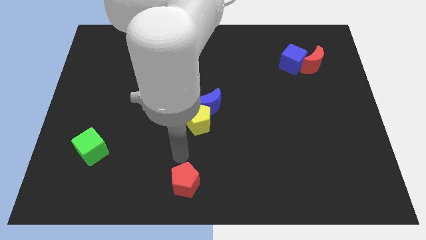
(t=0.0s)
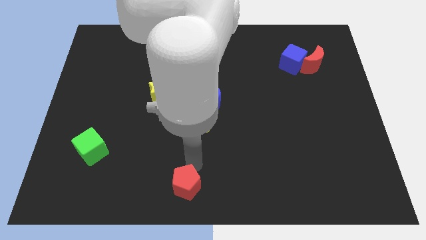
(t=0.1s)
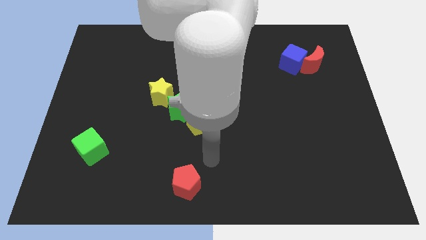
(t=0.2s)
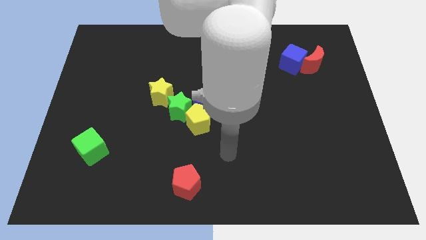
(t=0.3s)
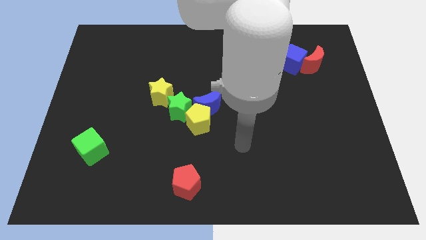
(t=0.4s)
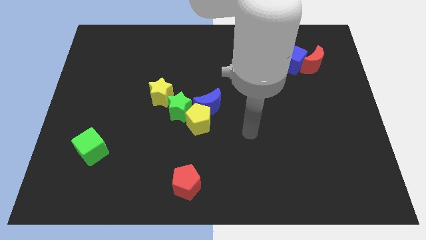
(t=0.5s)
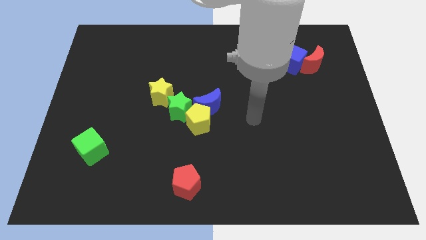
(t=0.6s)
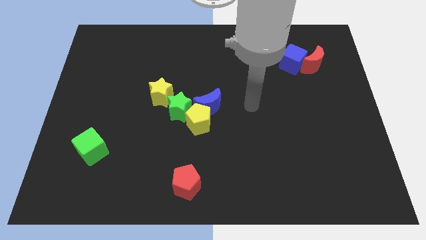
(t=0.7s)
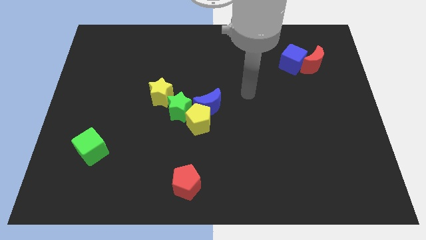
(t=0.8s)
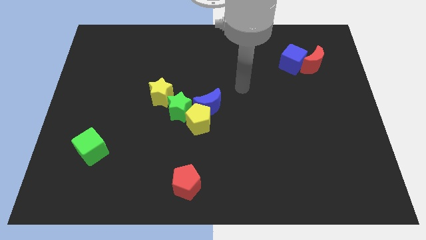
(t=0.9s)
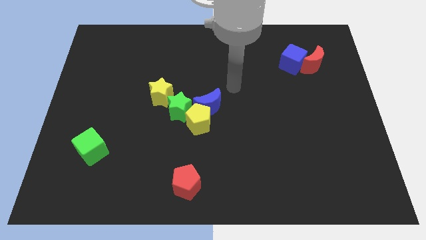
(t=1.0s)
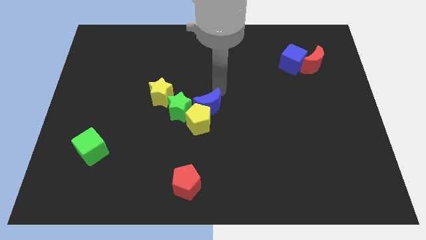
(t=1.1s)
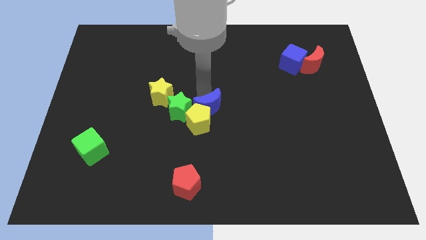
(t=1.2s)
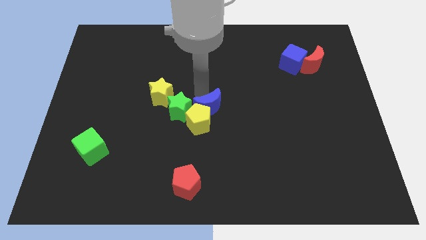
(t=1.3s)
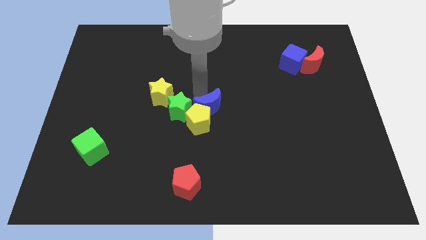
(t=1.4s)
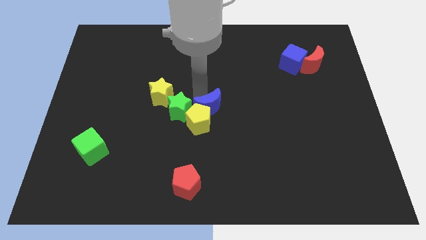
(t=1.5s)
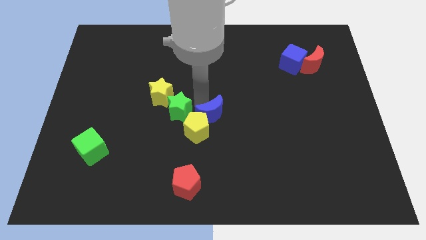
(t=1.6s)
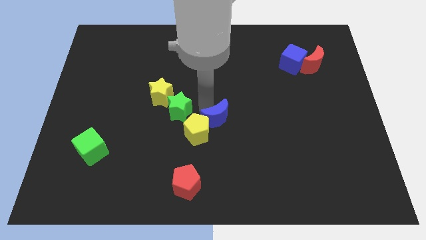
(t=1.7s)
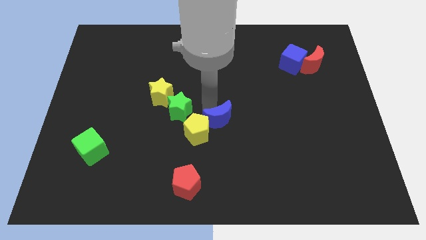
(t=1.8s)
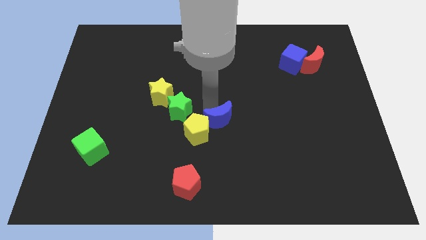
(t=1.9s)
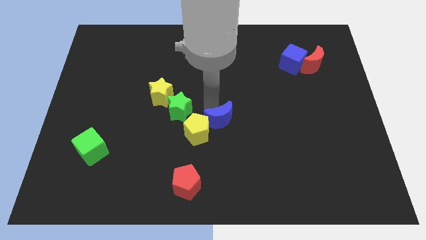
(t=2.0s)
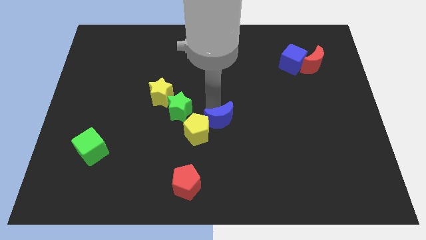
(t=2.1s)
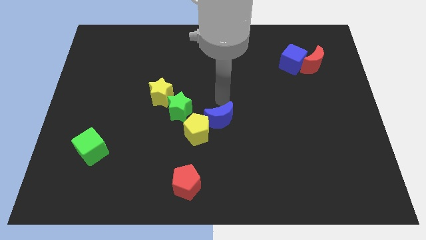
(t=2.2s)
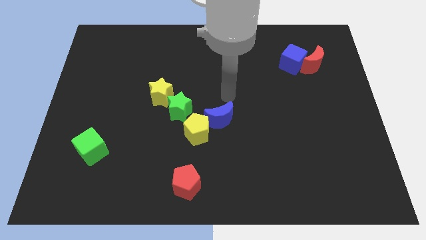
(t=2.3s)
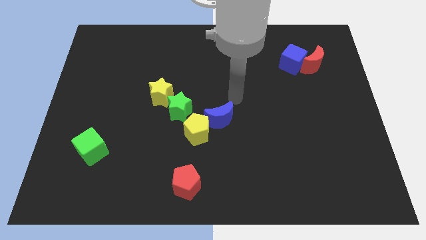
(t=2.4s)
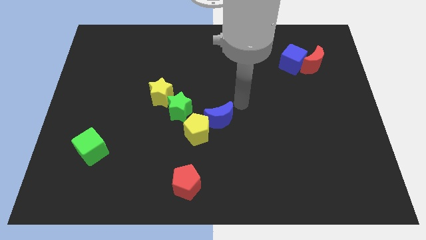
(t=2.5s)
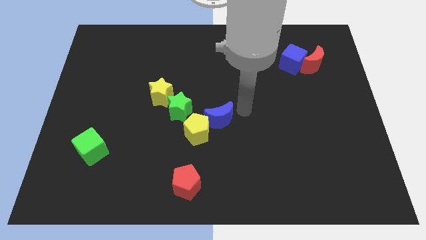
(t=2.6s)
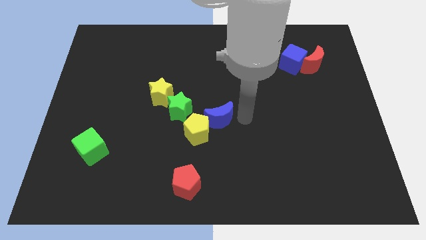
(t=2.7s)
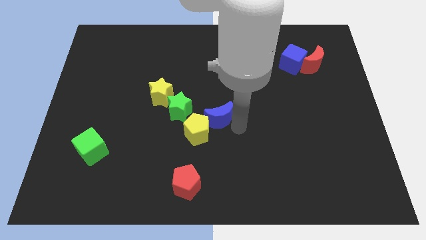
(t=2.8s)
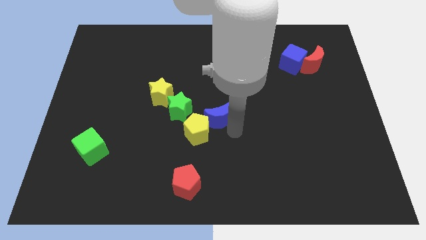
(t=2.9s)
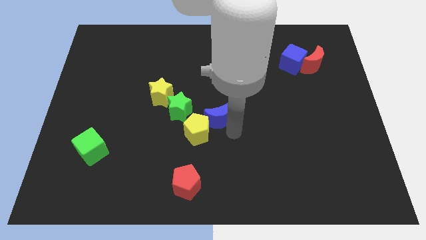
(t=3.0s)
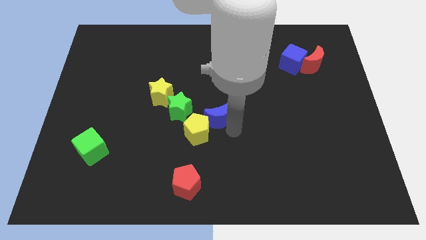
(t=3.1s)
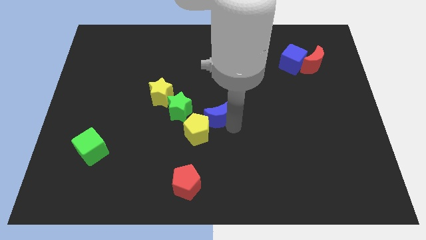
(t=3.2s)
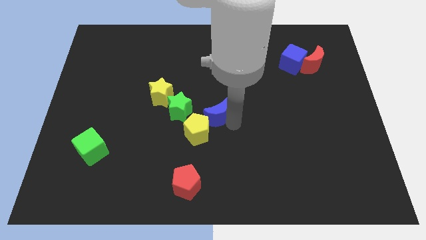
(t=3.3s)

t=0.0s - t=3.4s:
slightly push the blue moon

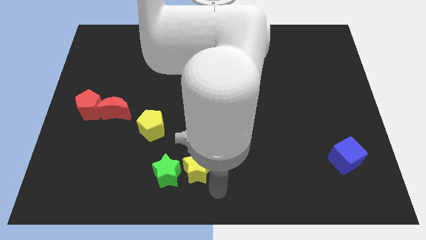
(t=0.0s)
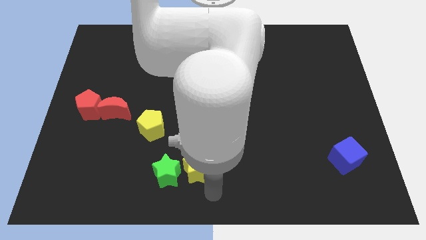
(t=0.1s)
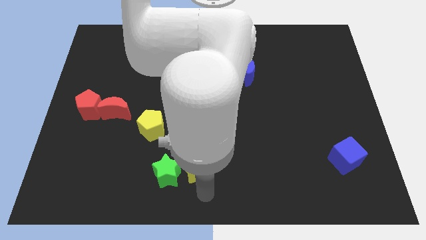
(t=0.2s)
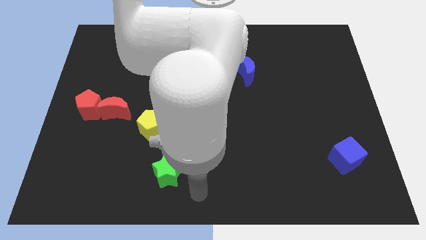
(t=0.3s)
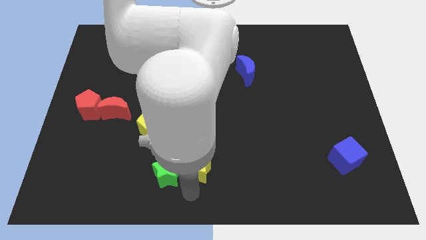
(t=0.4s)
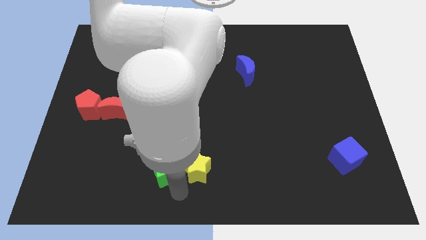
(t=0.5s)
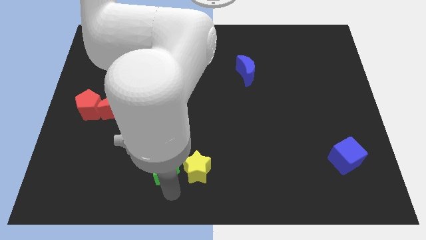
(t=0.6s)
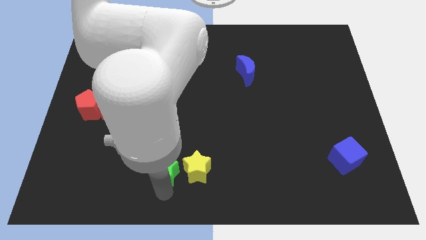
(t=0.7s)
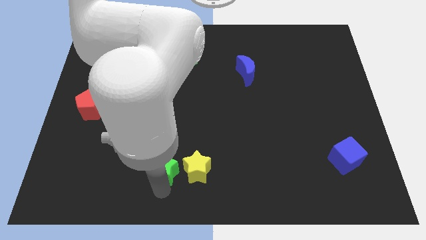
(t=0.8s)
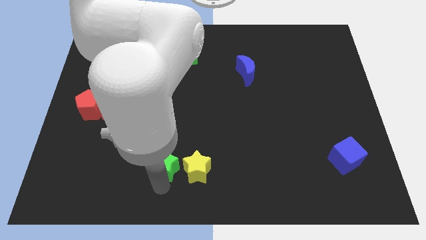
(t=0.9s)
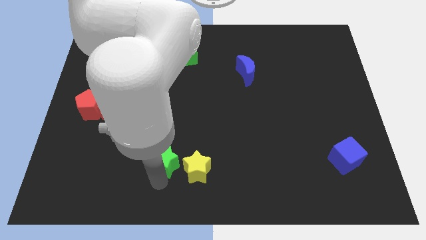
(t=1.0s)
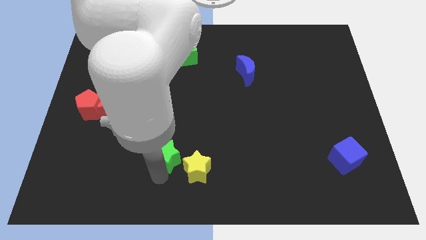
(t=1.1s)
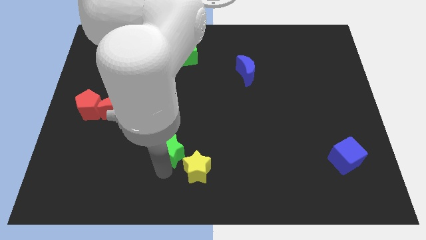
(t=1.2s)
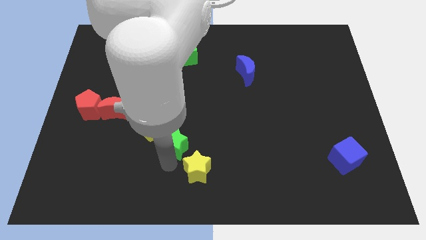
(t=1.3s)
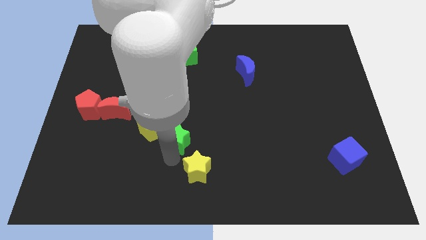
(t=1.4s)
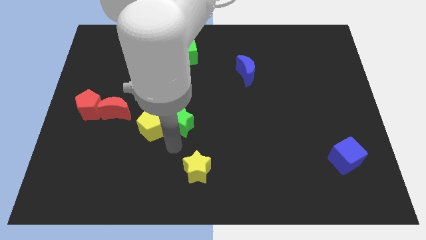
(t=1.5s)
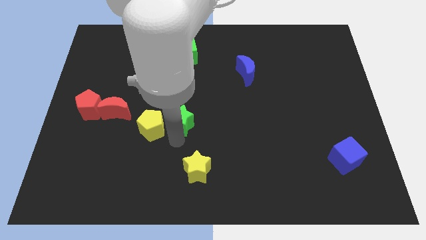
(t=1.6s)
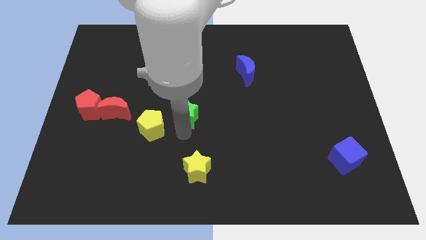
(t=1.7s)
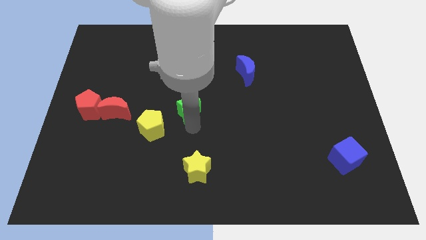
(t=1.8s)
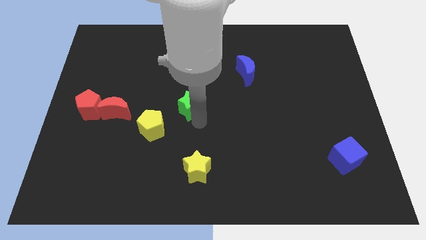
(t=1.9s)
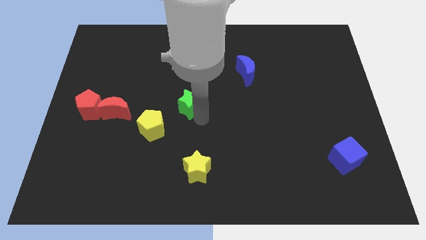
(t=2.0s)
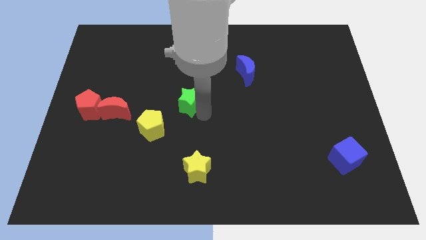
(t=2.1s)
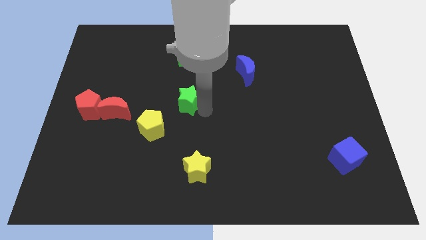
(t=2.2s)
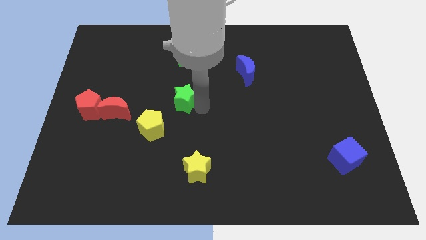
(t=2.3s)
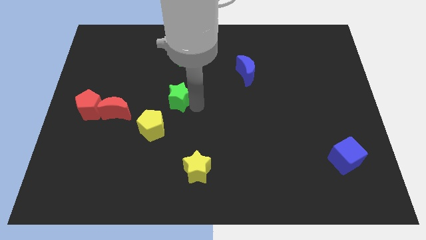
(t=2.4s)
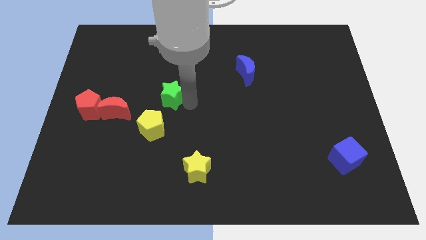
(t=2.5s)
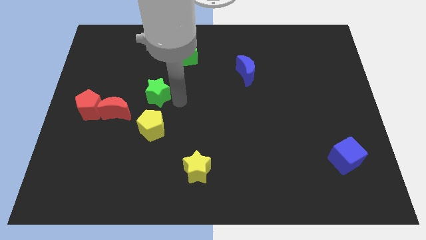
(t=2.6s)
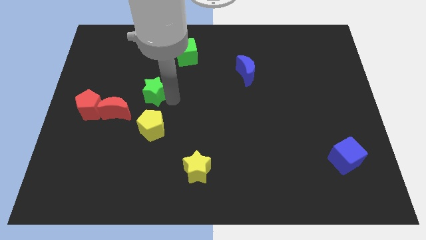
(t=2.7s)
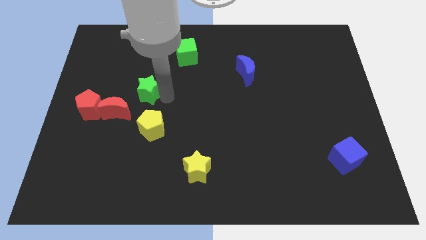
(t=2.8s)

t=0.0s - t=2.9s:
place the green star above the yellow pentagon

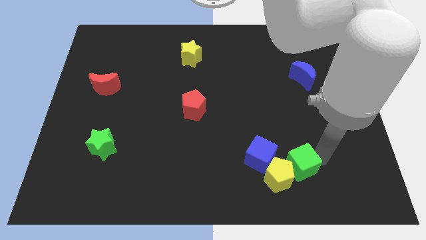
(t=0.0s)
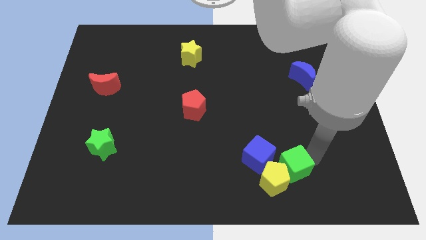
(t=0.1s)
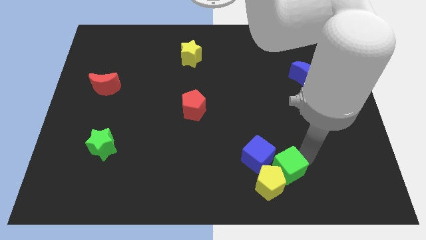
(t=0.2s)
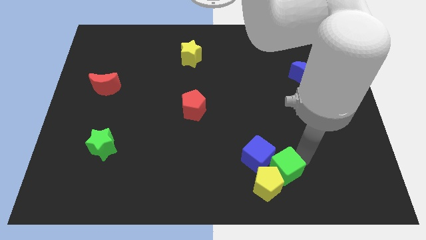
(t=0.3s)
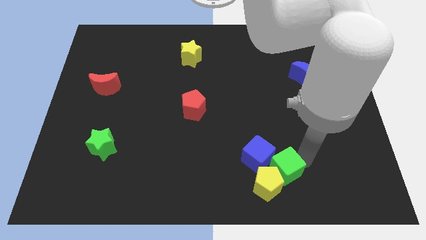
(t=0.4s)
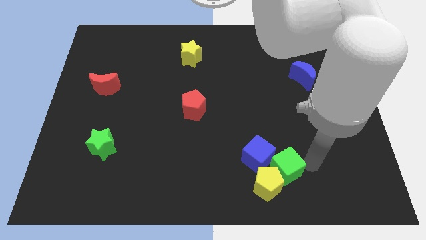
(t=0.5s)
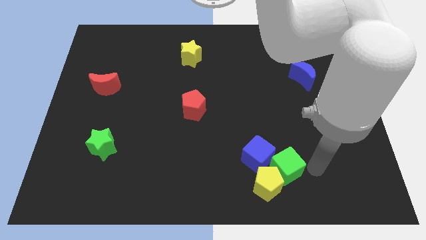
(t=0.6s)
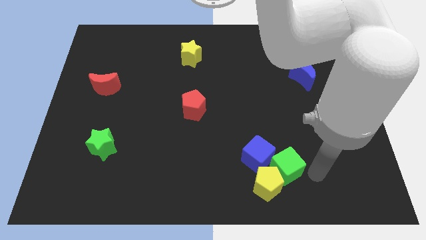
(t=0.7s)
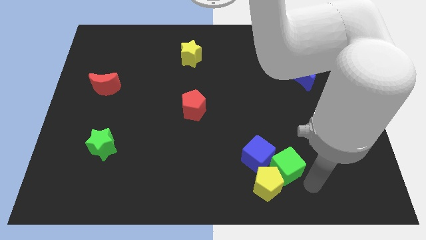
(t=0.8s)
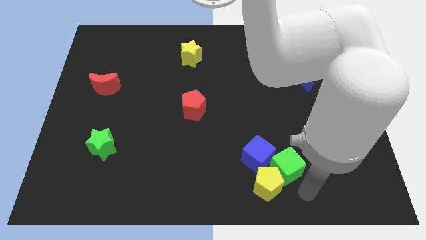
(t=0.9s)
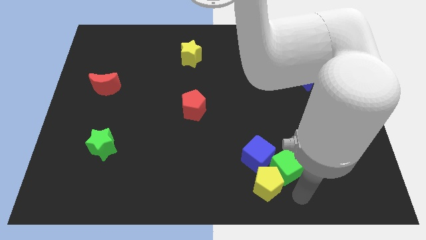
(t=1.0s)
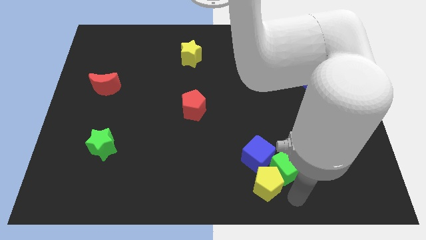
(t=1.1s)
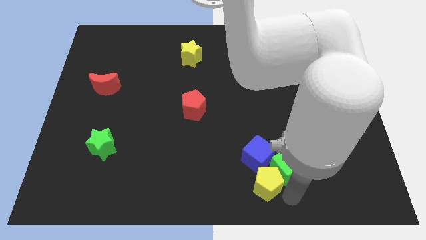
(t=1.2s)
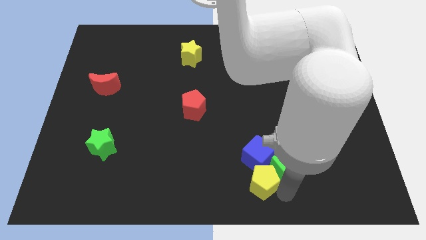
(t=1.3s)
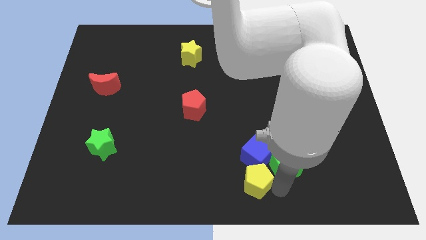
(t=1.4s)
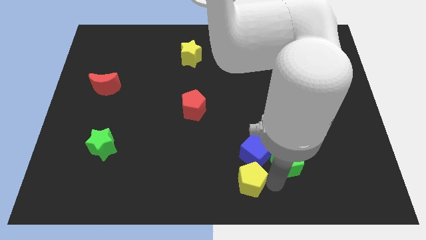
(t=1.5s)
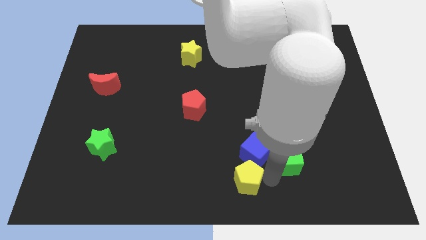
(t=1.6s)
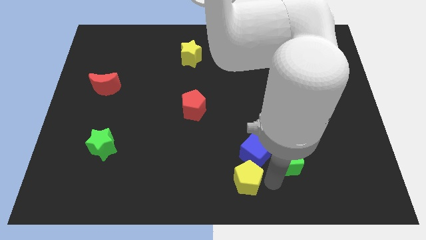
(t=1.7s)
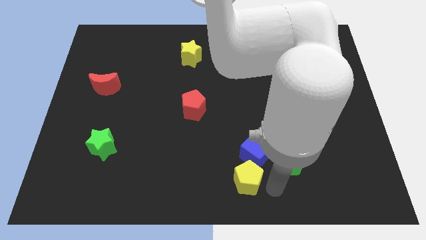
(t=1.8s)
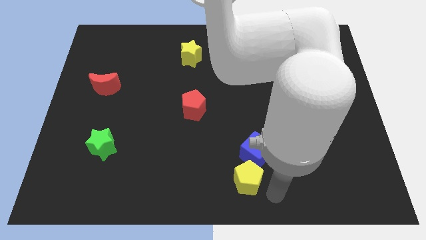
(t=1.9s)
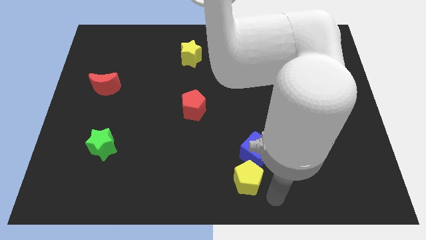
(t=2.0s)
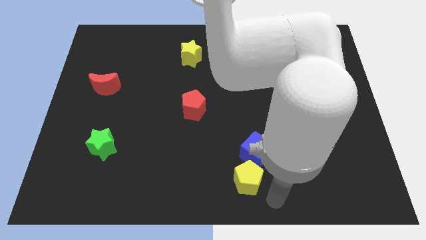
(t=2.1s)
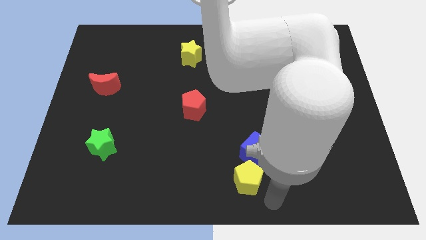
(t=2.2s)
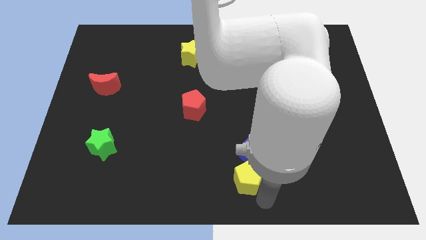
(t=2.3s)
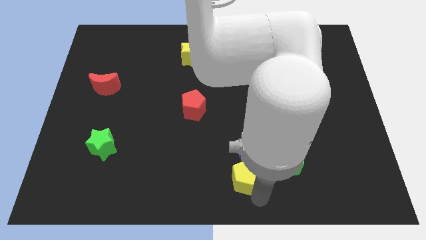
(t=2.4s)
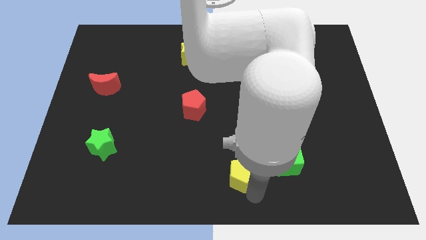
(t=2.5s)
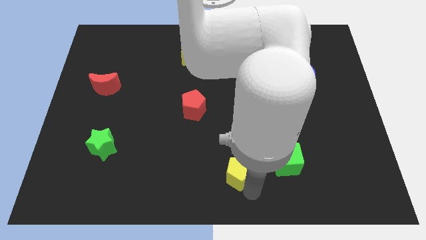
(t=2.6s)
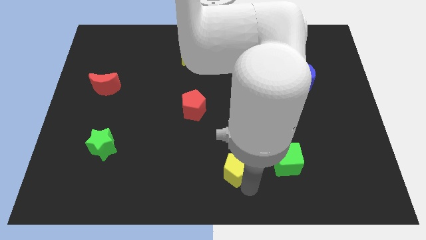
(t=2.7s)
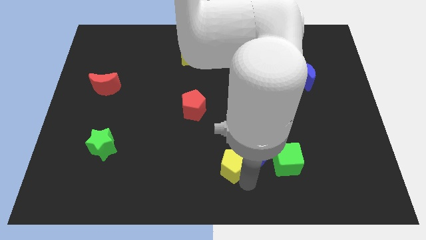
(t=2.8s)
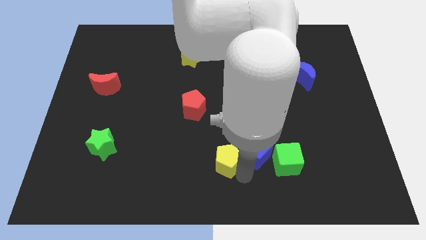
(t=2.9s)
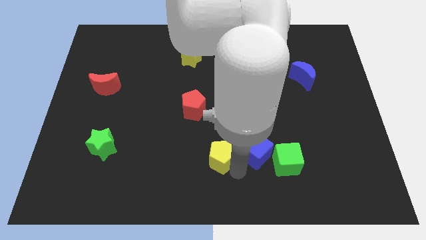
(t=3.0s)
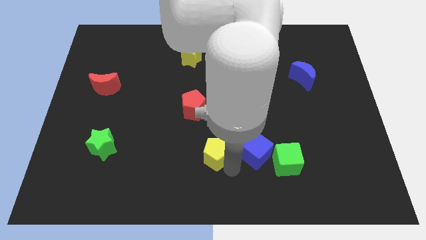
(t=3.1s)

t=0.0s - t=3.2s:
separate the green cube and the yellow pentagon
